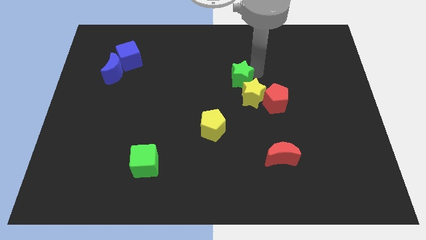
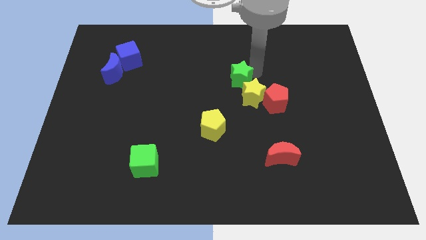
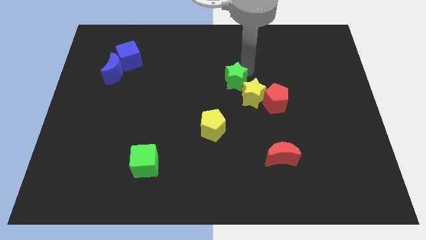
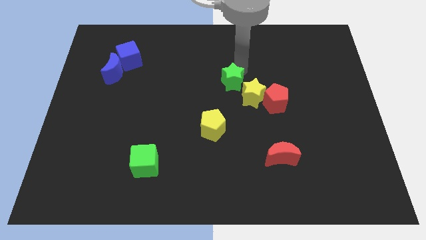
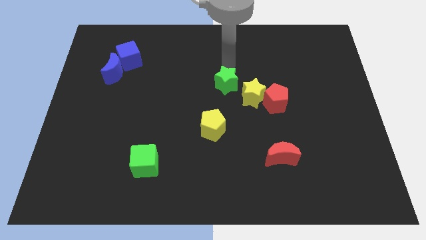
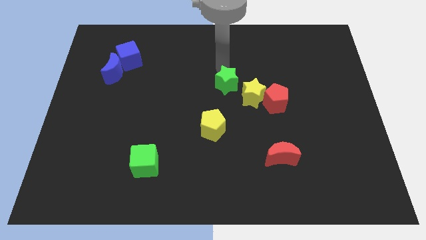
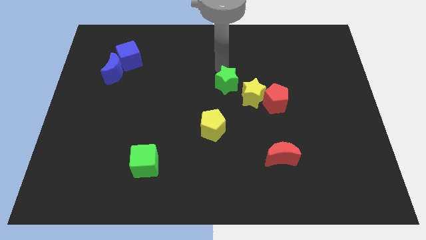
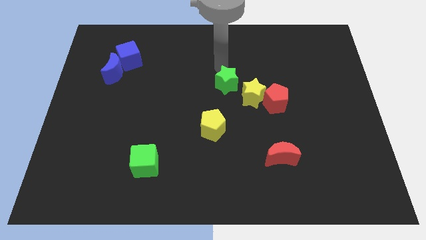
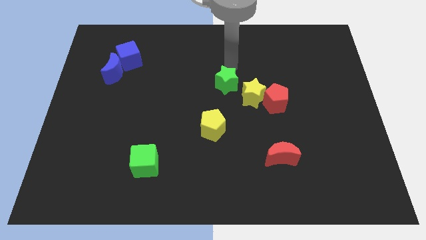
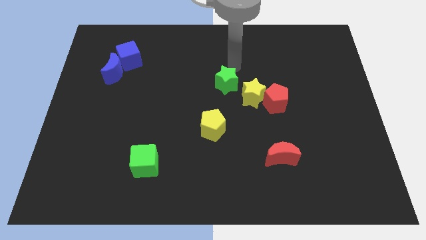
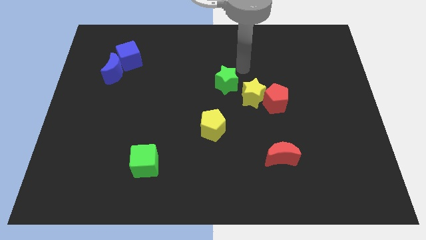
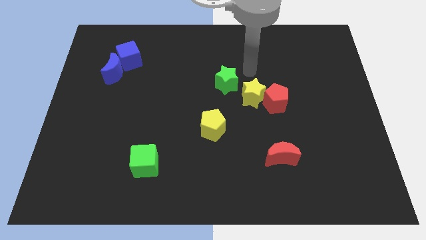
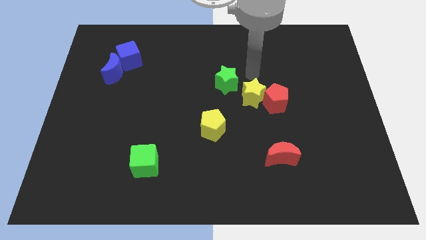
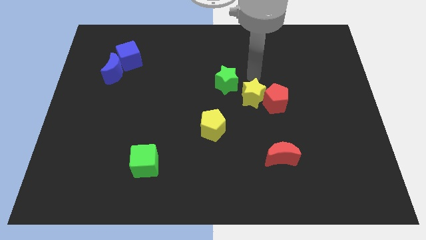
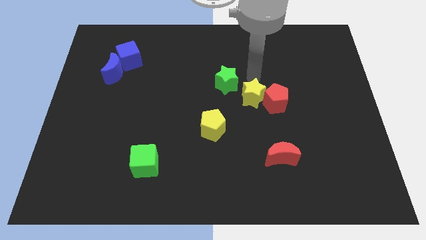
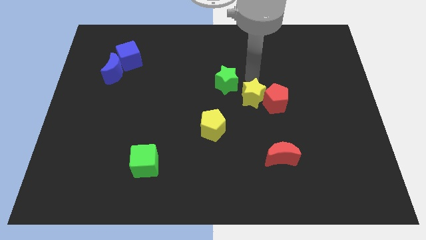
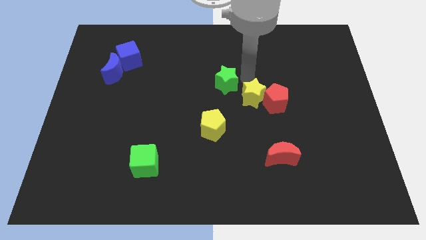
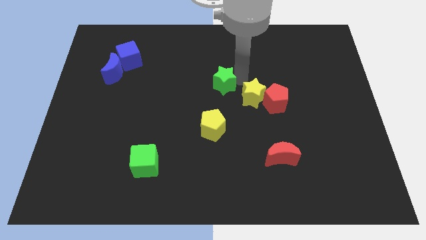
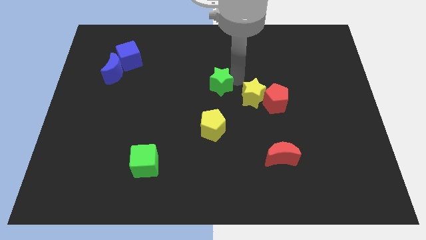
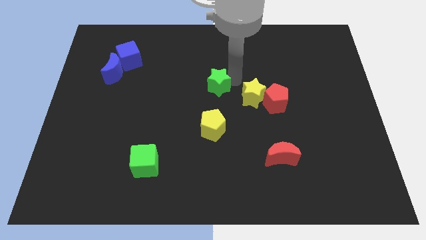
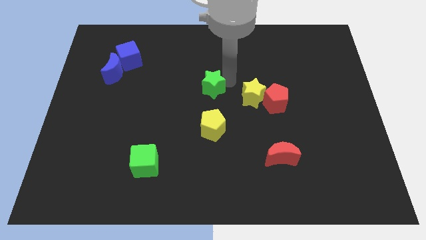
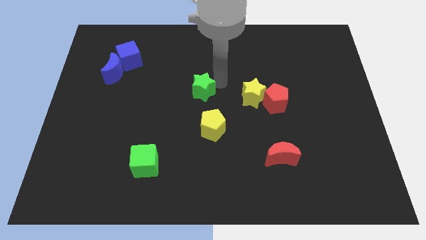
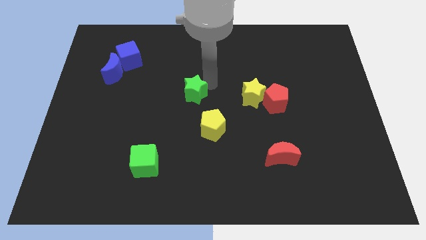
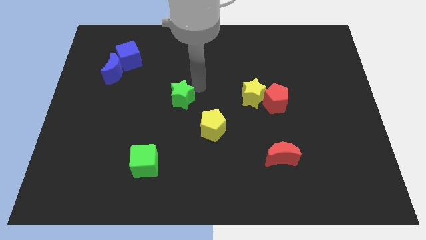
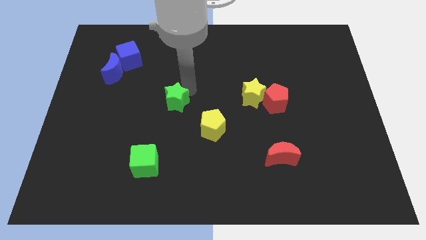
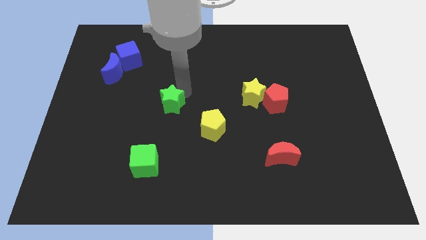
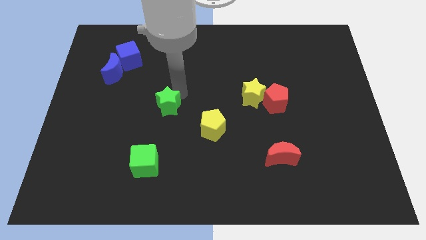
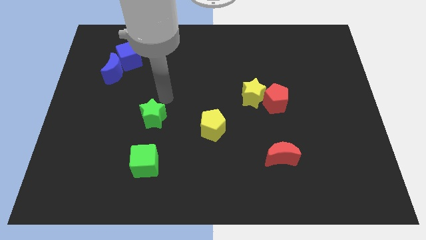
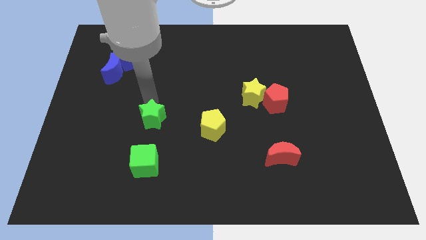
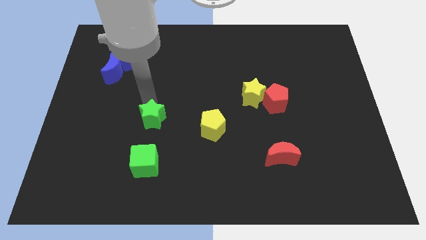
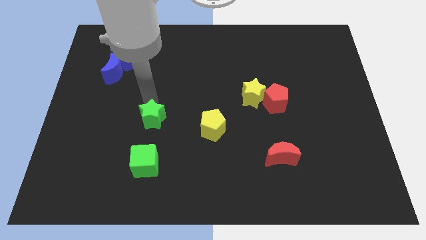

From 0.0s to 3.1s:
push the green star above the green cube

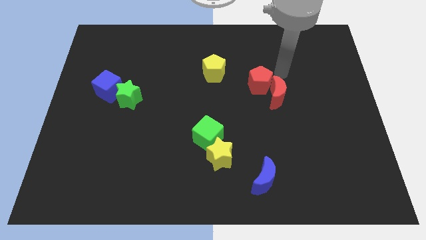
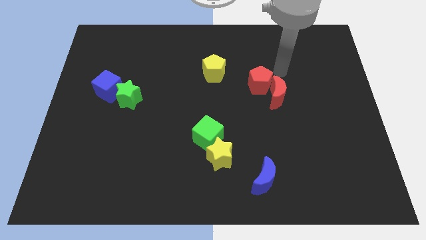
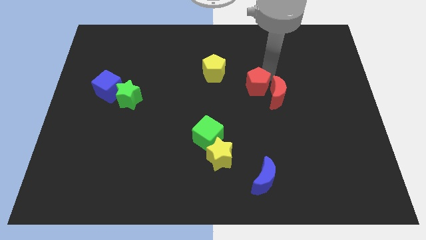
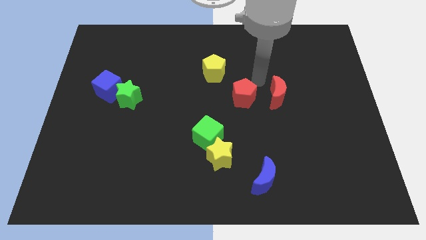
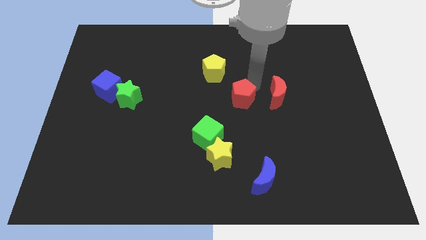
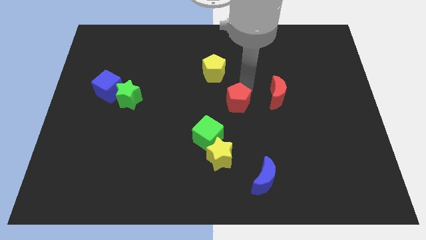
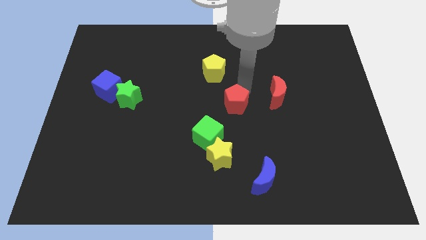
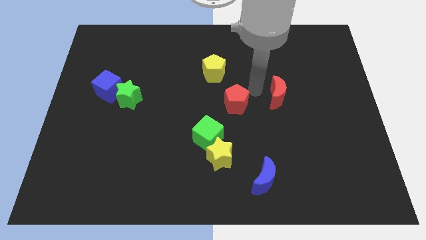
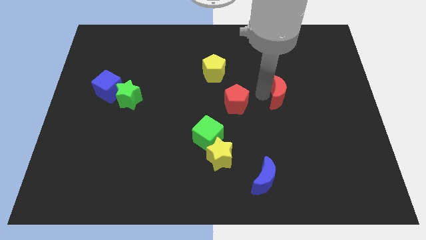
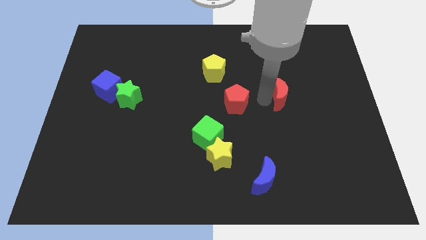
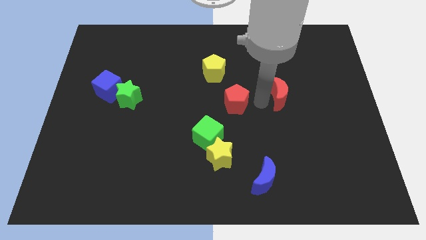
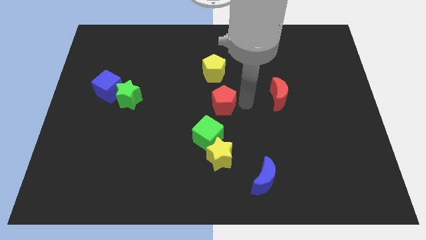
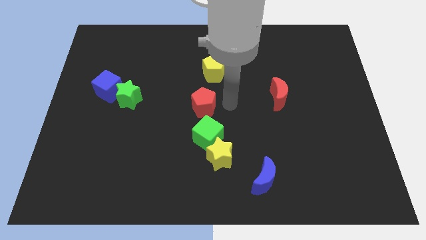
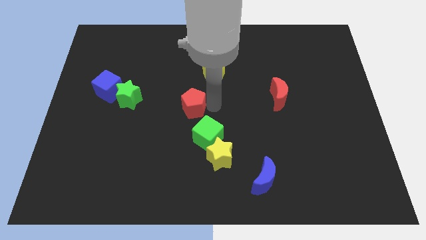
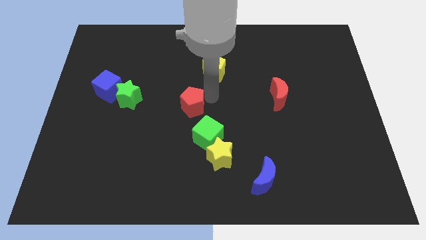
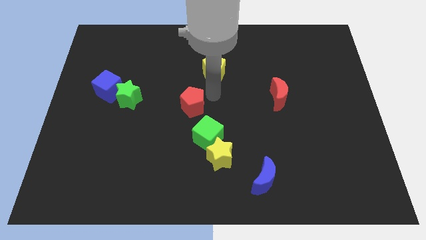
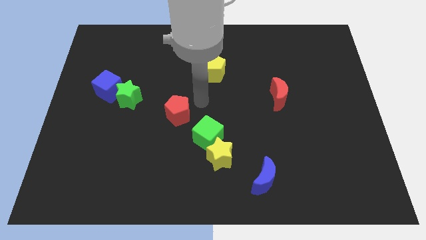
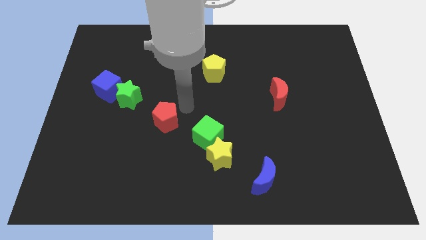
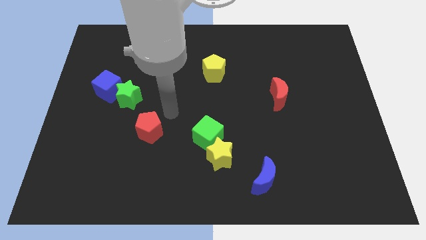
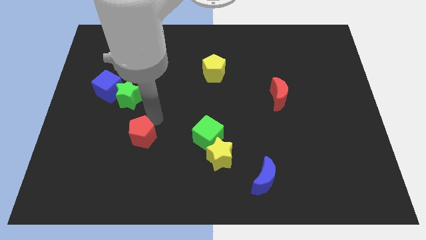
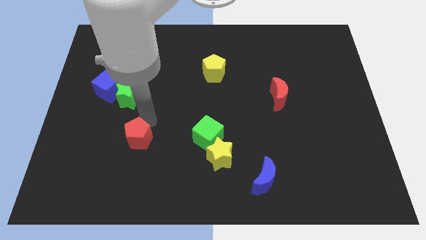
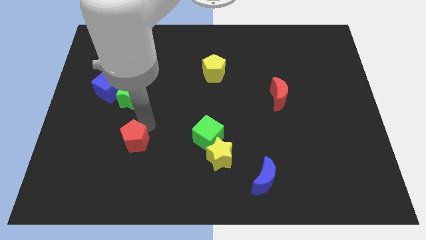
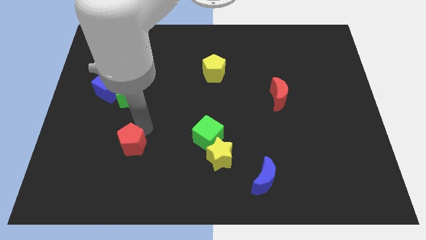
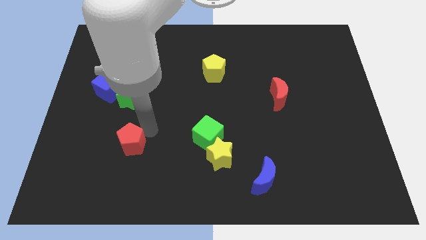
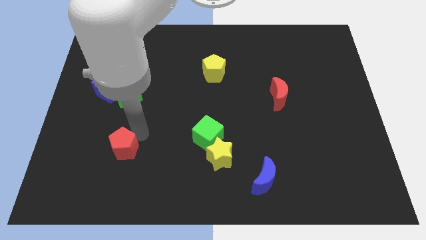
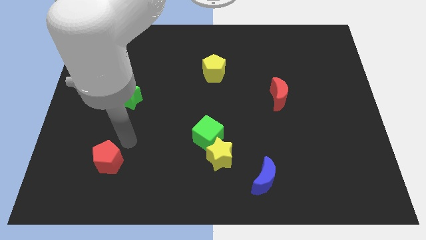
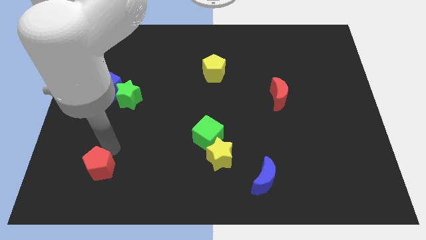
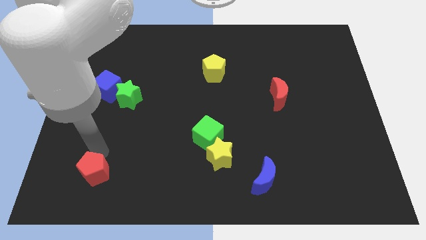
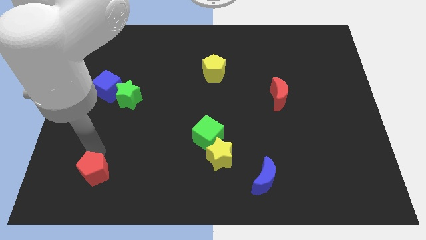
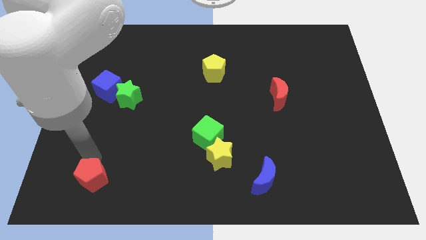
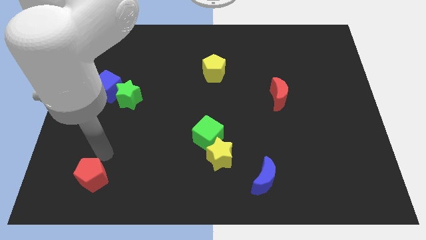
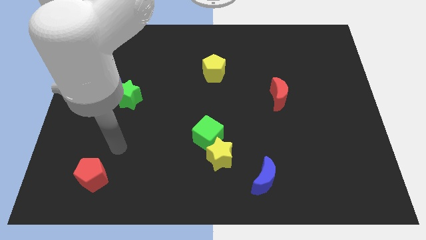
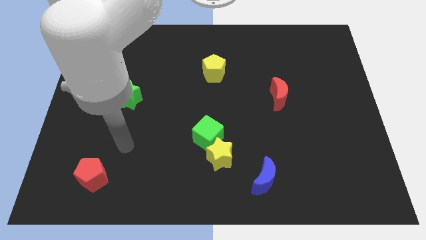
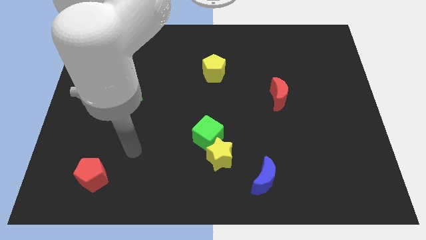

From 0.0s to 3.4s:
push the red pentagon to the bottom left of the board

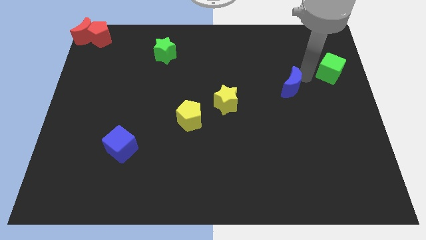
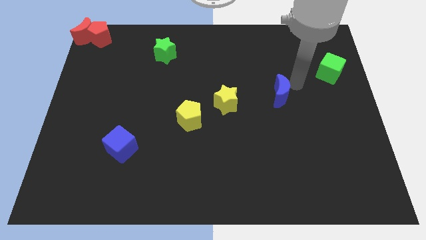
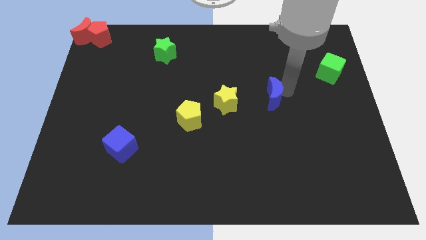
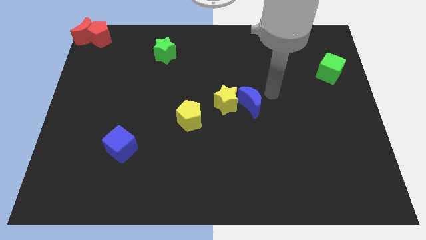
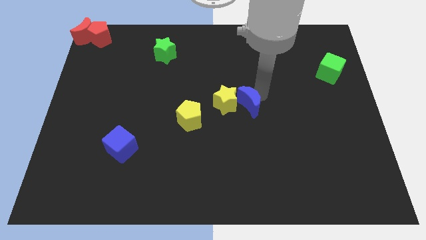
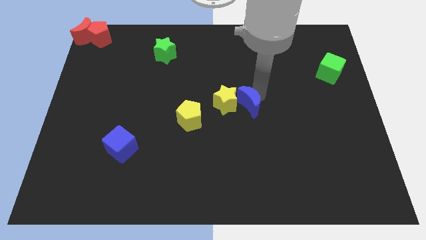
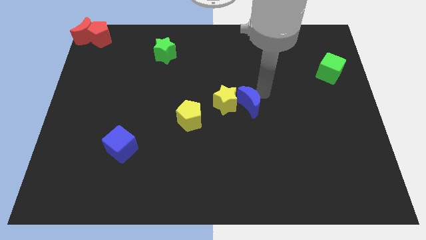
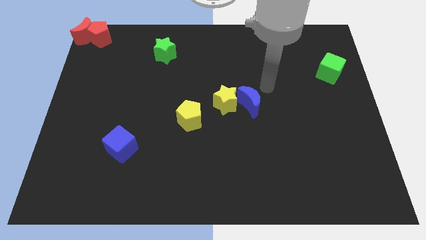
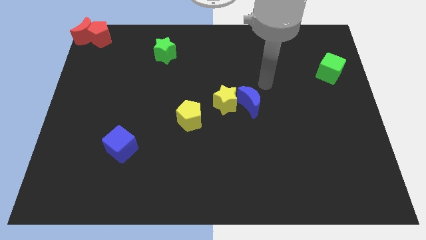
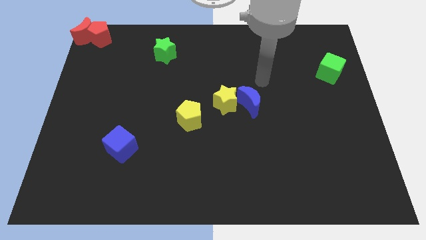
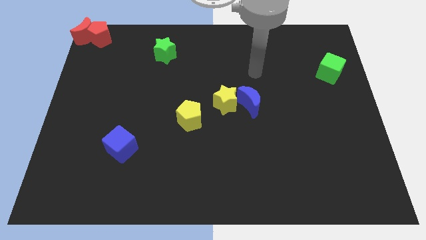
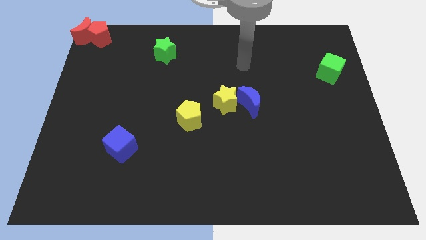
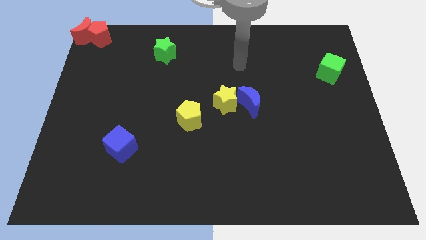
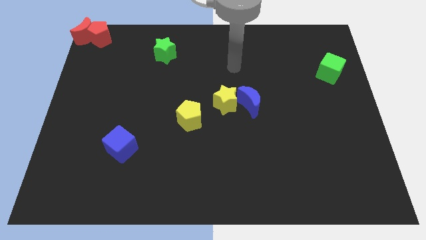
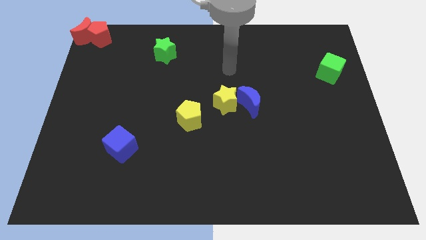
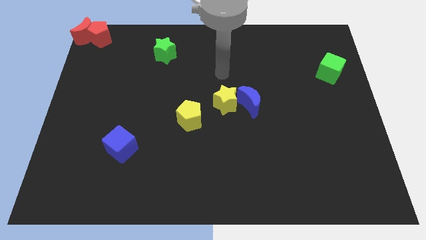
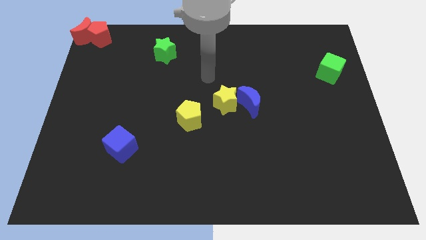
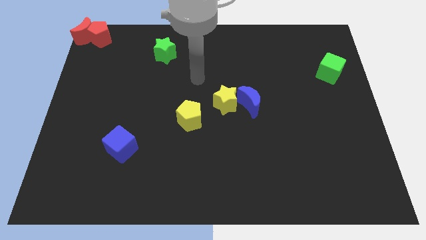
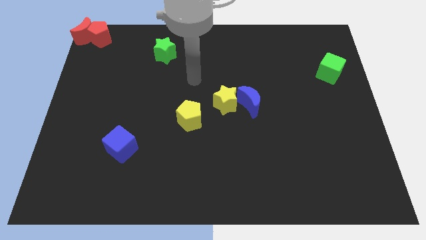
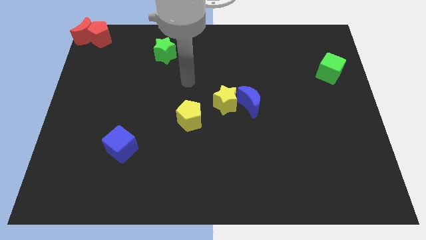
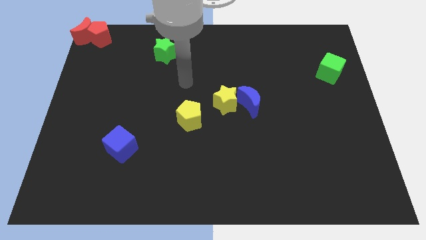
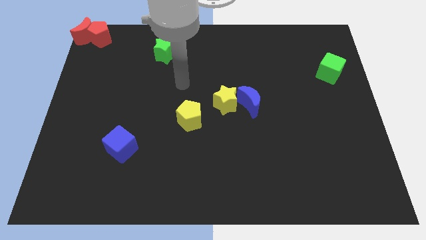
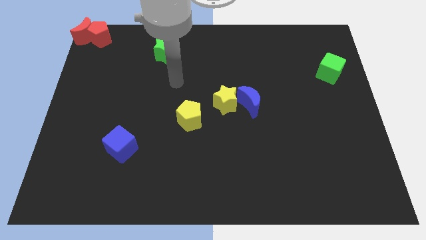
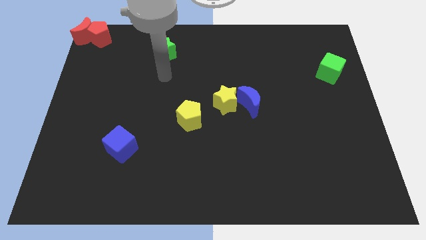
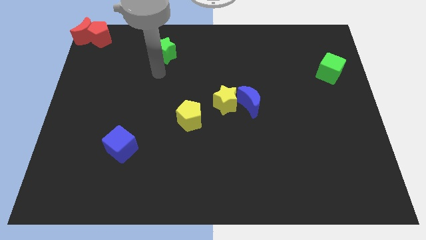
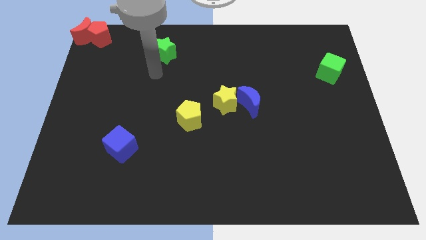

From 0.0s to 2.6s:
move blue crescent into the right of the yellow star
